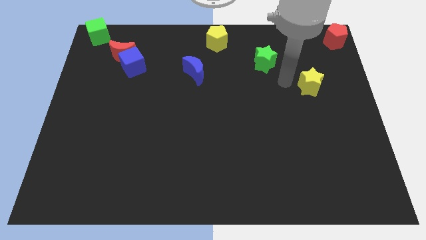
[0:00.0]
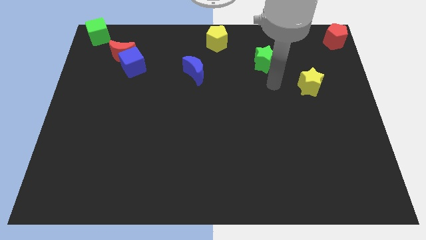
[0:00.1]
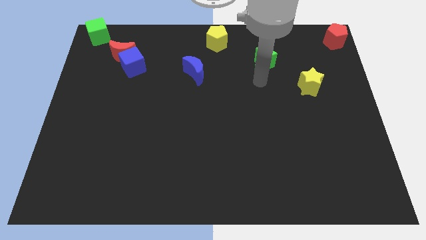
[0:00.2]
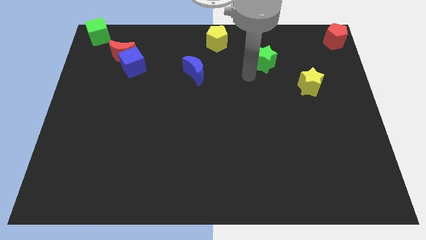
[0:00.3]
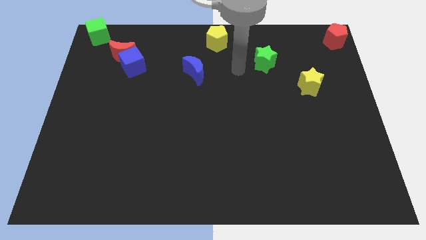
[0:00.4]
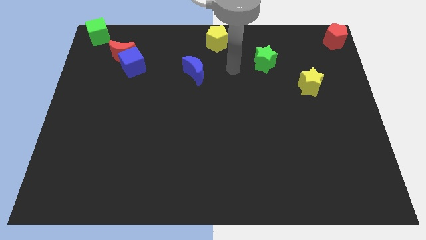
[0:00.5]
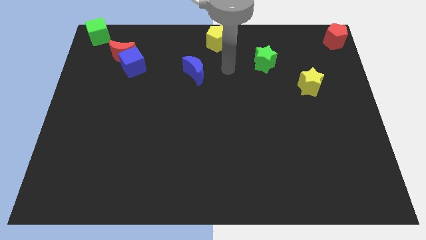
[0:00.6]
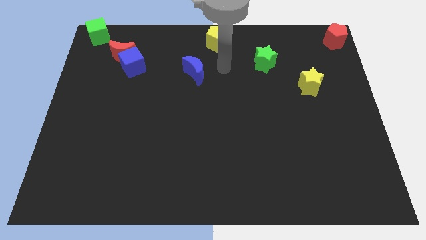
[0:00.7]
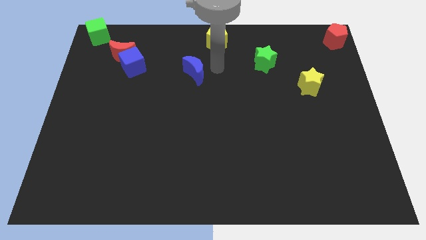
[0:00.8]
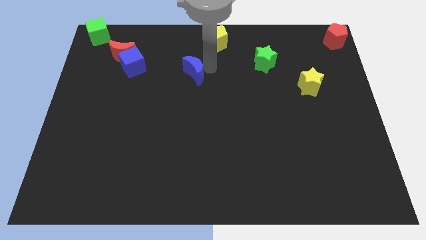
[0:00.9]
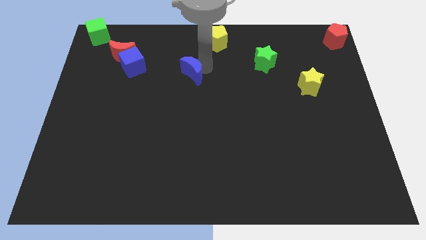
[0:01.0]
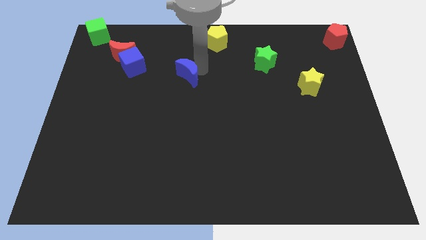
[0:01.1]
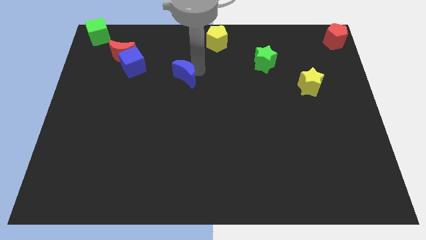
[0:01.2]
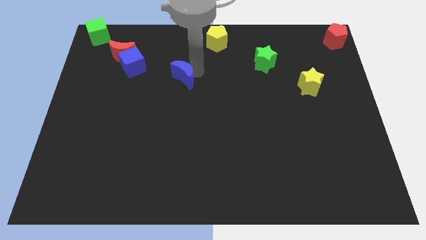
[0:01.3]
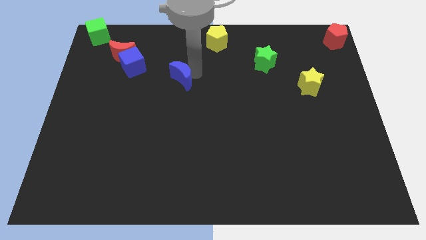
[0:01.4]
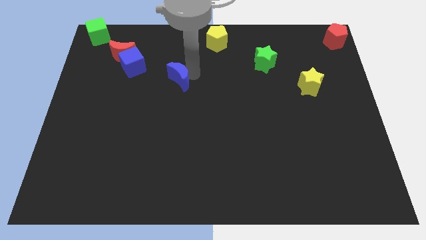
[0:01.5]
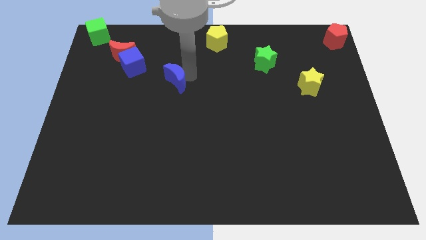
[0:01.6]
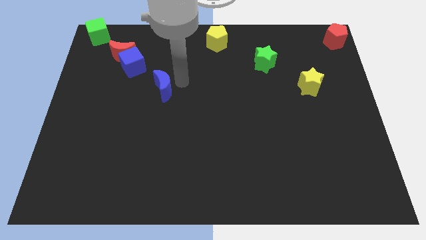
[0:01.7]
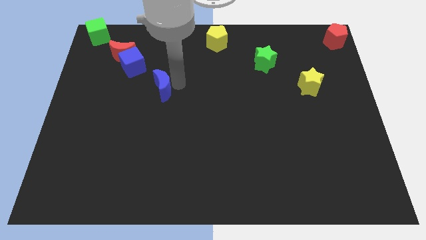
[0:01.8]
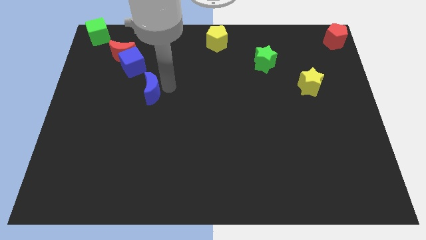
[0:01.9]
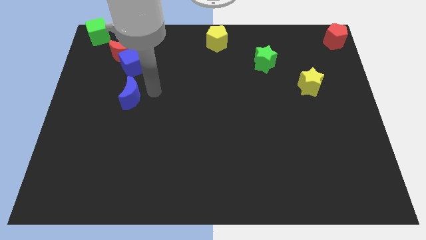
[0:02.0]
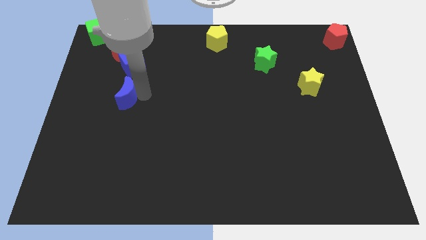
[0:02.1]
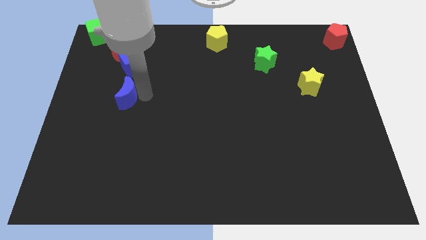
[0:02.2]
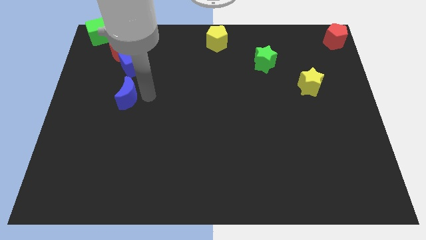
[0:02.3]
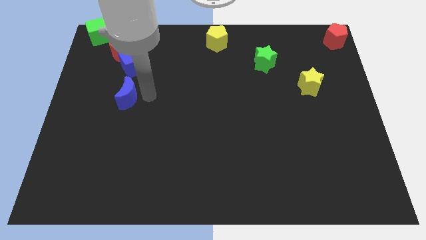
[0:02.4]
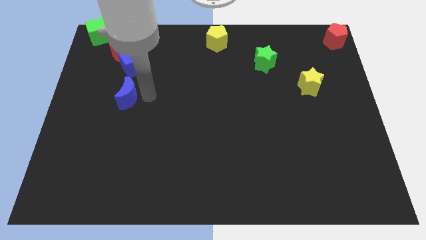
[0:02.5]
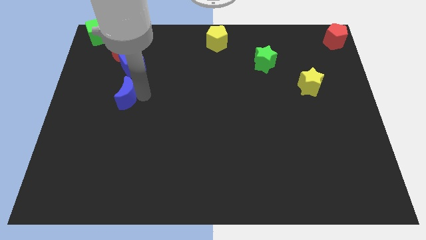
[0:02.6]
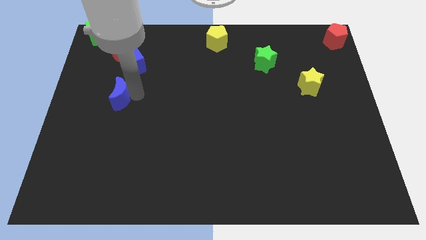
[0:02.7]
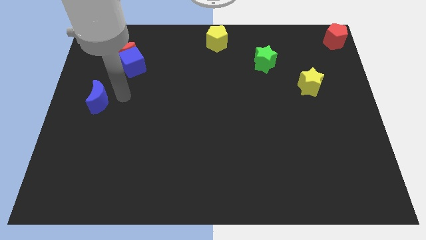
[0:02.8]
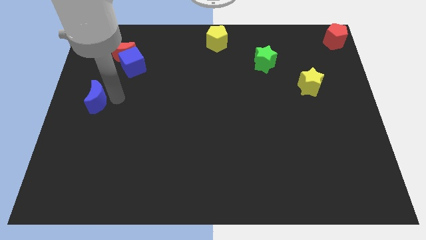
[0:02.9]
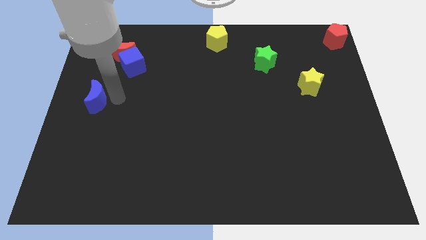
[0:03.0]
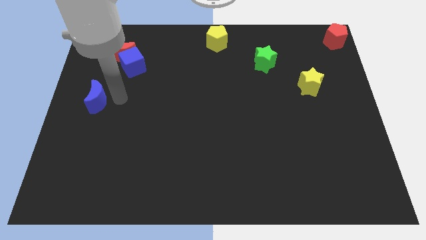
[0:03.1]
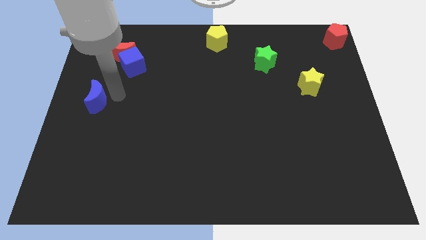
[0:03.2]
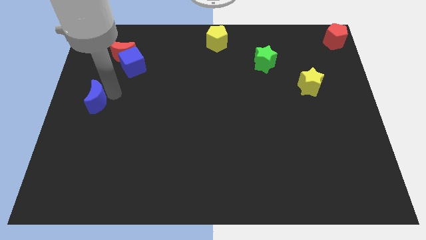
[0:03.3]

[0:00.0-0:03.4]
move the blue moon left center of the board

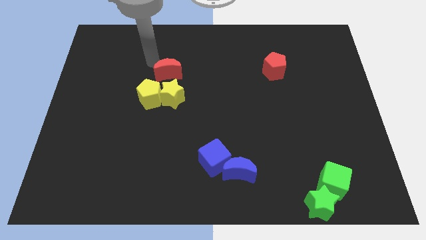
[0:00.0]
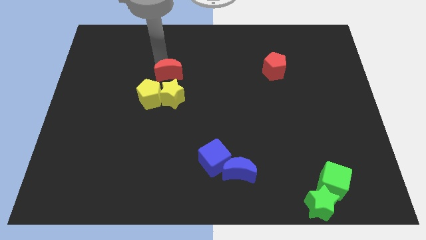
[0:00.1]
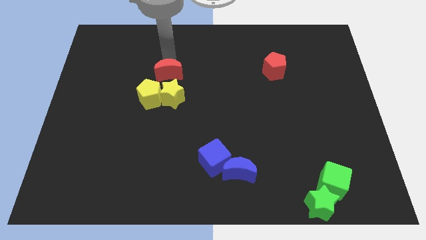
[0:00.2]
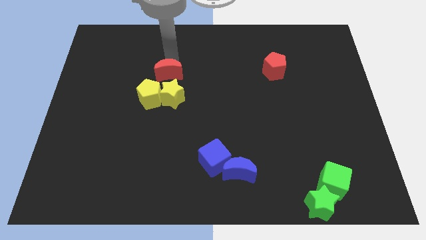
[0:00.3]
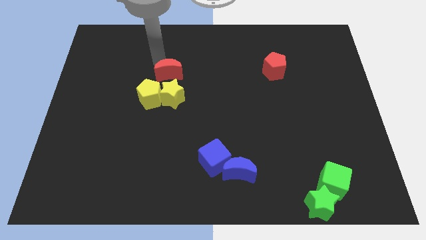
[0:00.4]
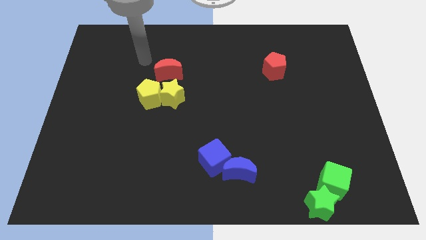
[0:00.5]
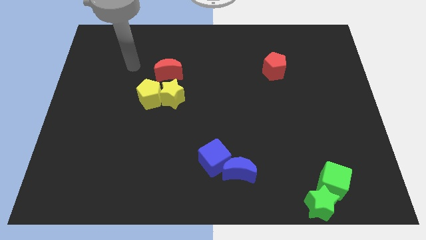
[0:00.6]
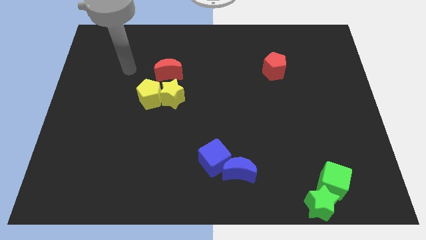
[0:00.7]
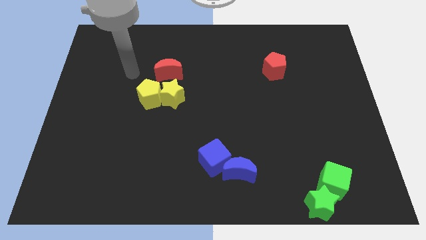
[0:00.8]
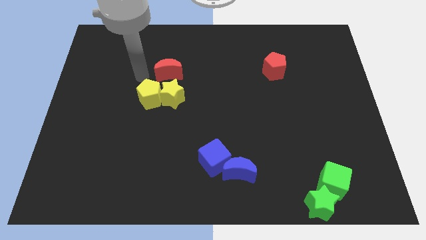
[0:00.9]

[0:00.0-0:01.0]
move the red crescent above the yellow star

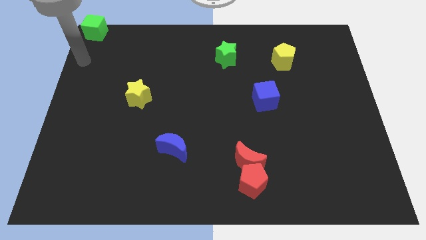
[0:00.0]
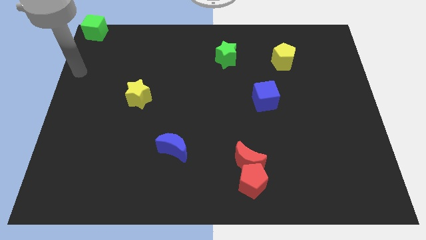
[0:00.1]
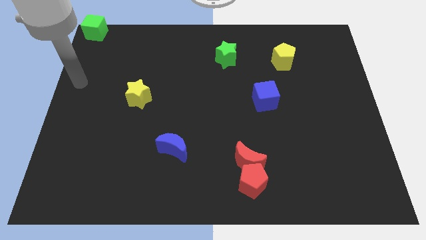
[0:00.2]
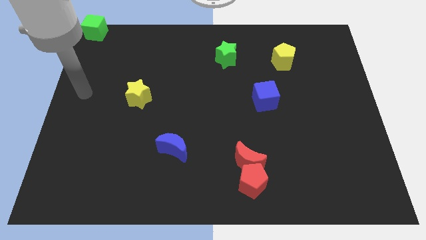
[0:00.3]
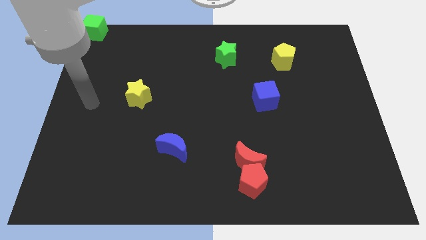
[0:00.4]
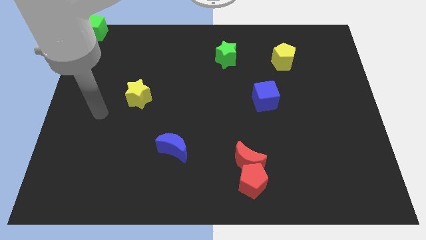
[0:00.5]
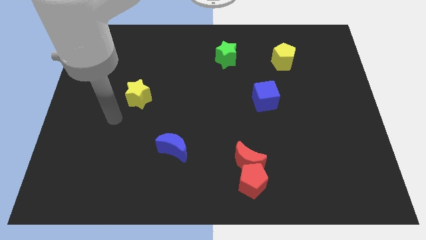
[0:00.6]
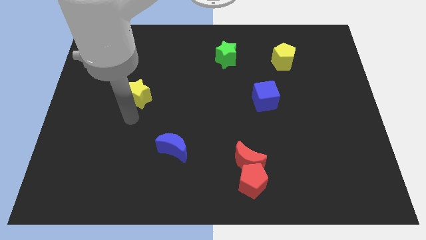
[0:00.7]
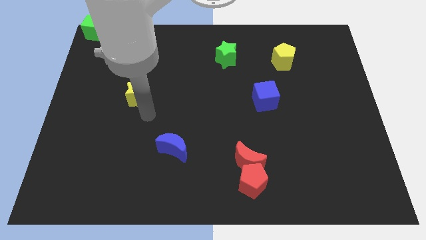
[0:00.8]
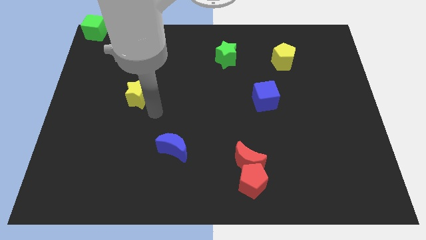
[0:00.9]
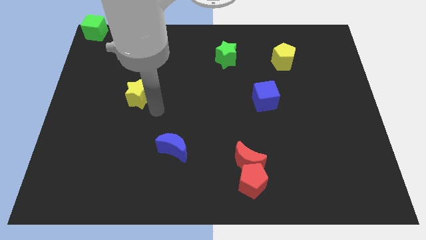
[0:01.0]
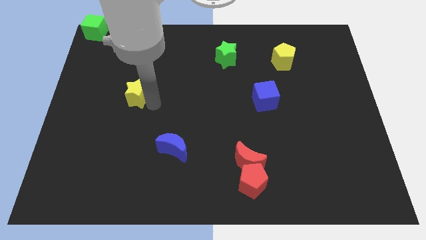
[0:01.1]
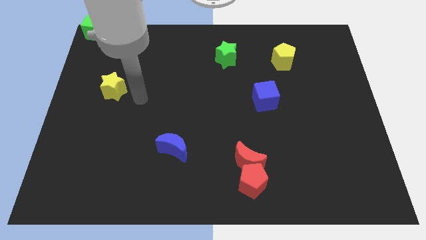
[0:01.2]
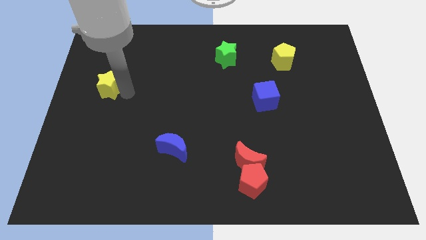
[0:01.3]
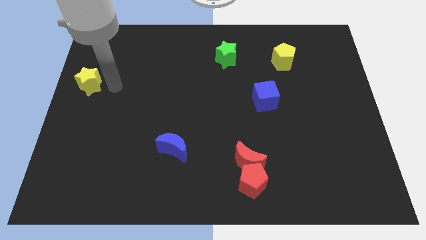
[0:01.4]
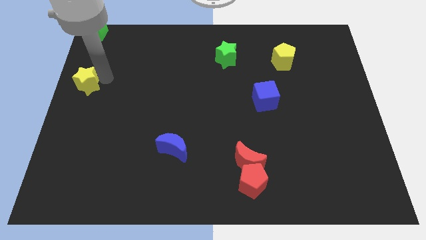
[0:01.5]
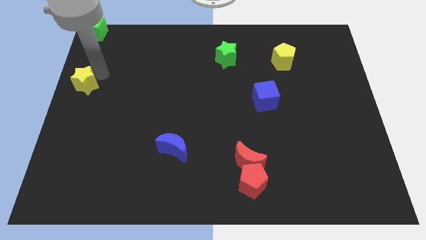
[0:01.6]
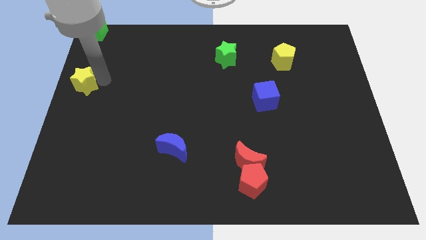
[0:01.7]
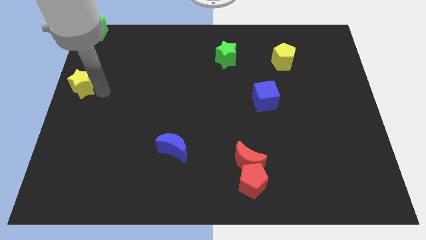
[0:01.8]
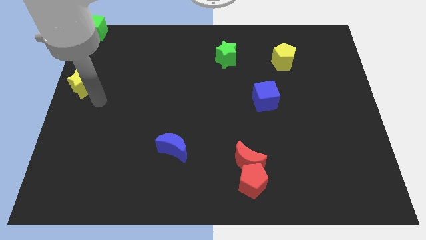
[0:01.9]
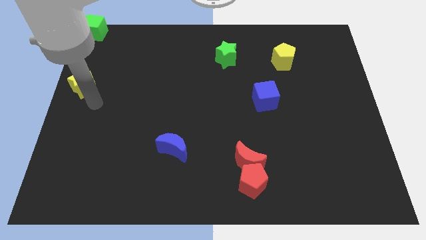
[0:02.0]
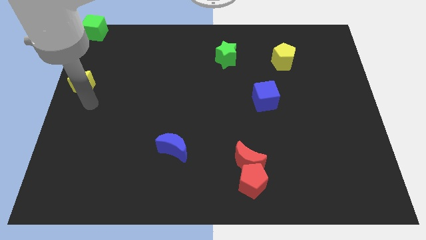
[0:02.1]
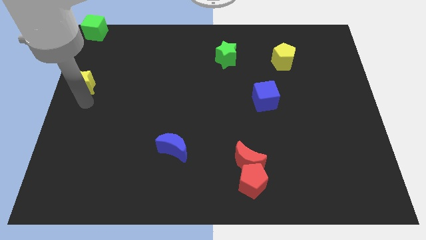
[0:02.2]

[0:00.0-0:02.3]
move the yellow star below green cube

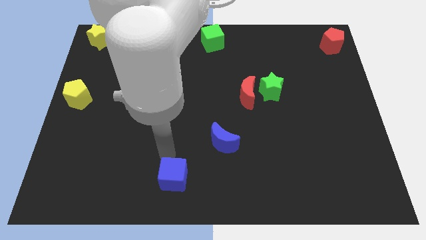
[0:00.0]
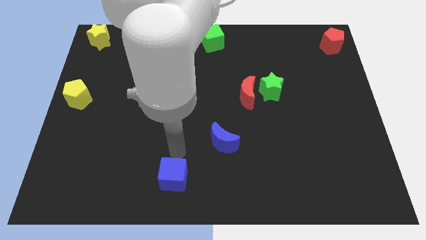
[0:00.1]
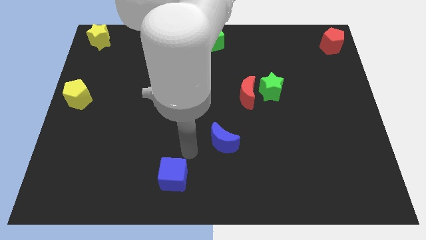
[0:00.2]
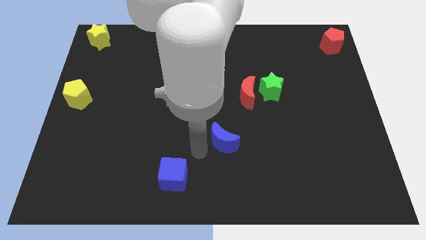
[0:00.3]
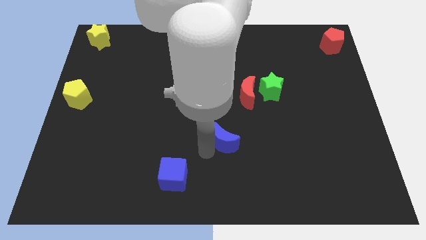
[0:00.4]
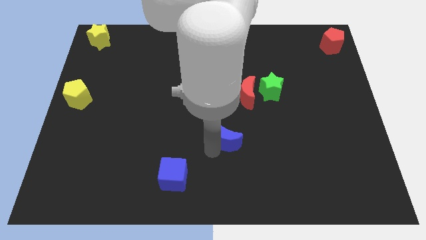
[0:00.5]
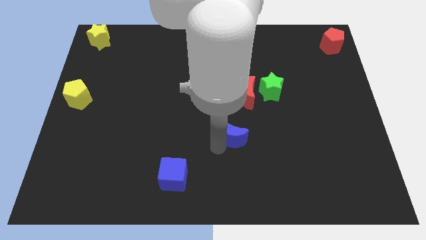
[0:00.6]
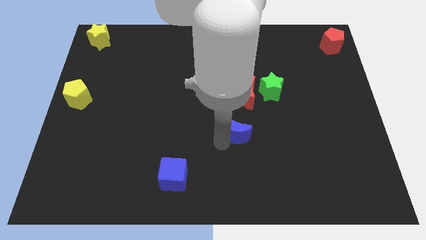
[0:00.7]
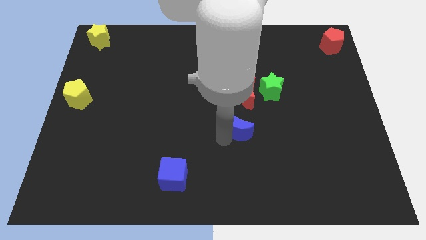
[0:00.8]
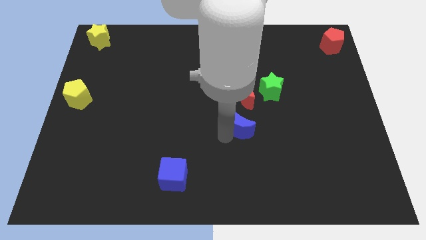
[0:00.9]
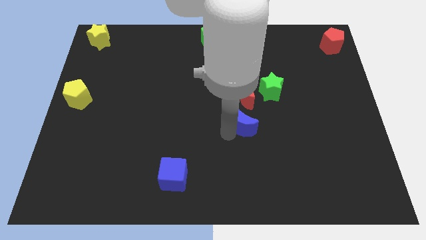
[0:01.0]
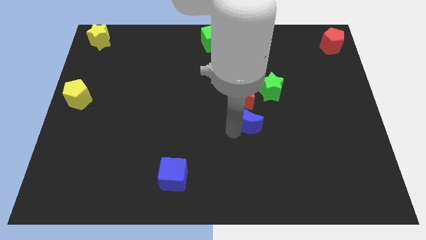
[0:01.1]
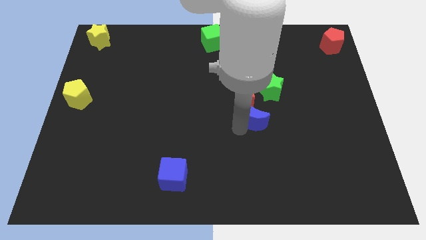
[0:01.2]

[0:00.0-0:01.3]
place the blue crescent below the red crescent

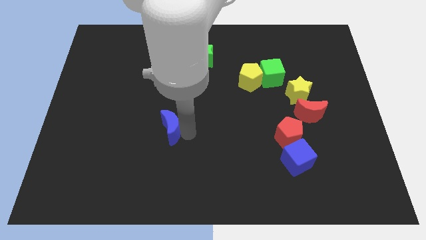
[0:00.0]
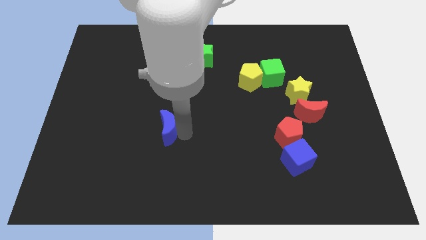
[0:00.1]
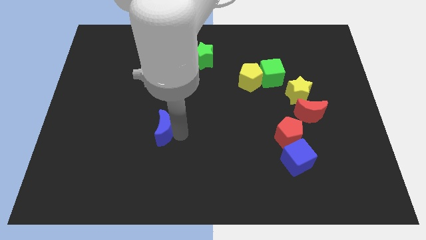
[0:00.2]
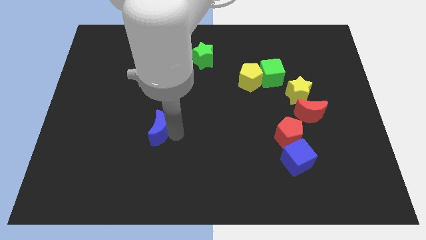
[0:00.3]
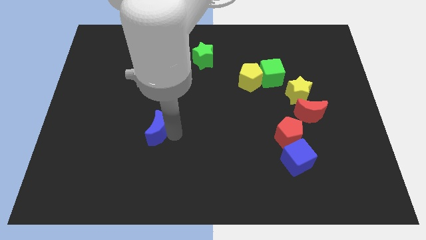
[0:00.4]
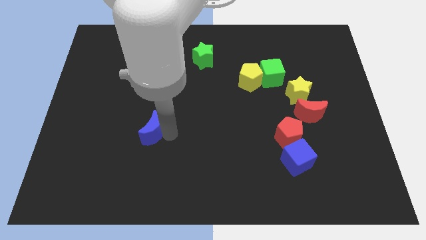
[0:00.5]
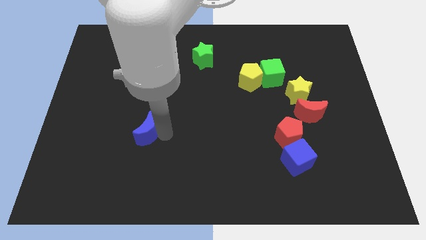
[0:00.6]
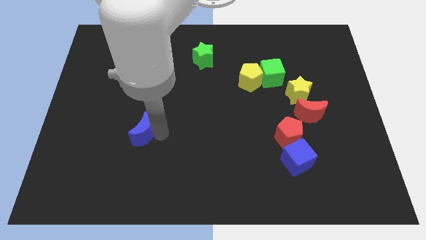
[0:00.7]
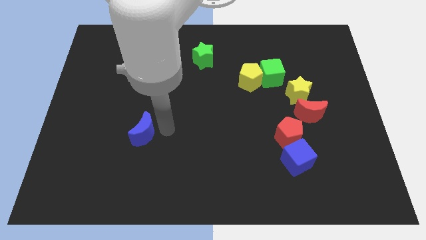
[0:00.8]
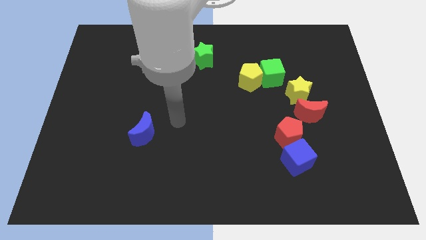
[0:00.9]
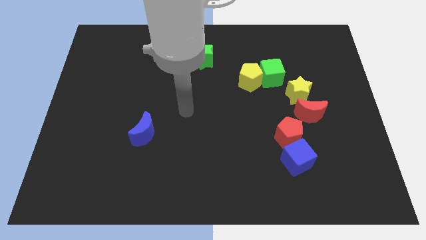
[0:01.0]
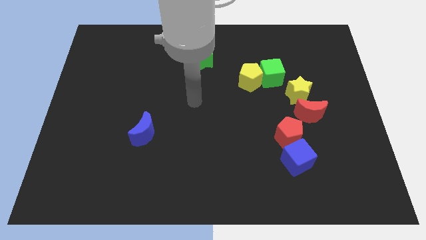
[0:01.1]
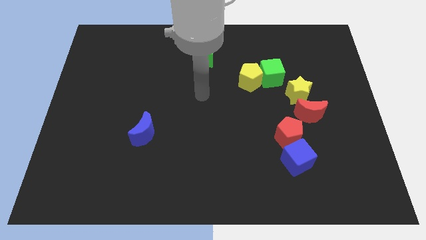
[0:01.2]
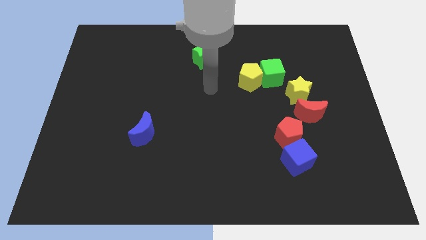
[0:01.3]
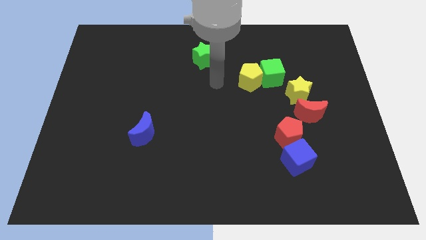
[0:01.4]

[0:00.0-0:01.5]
push the blue crescent slightly towards the left
